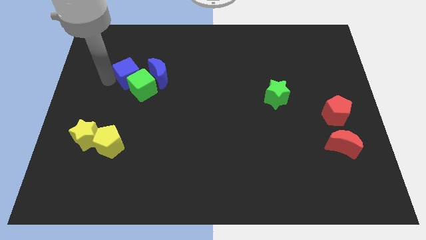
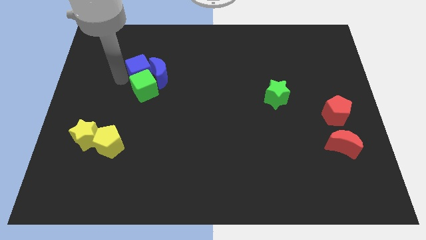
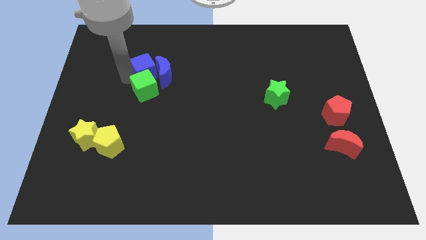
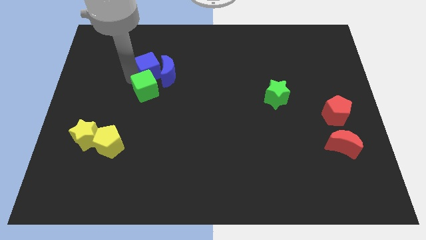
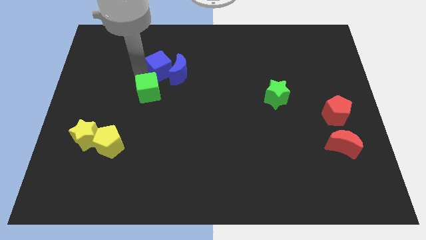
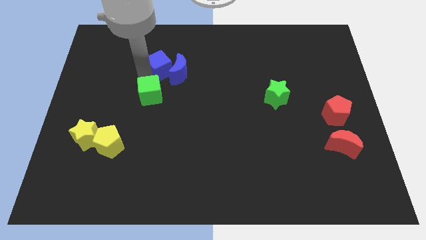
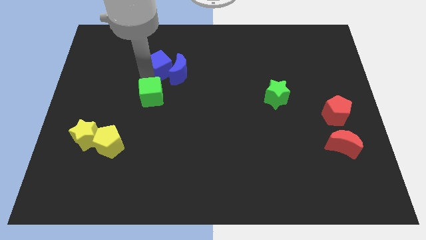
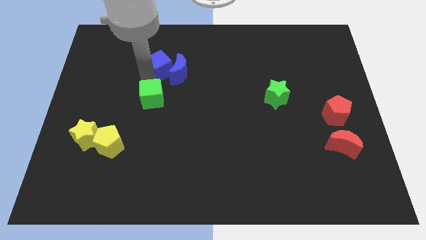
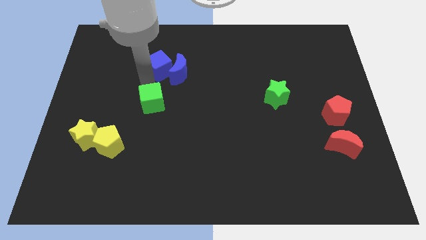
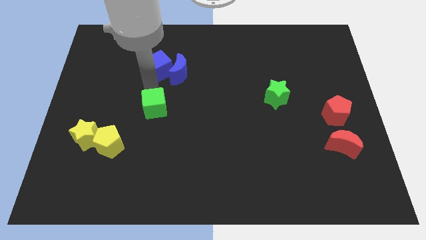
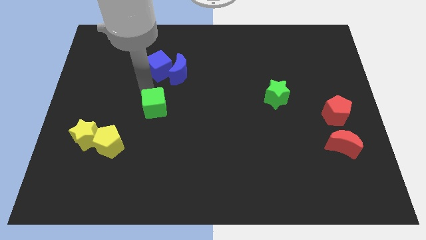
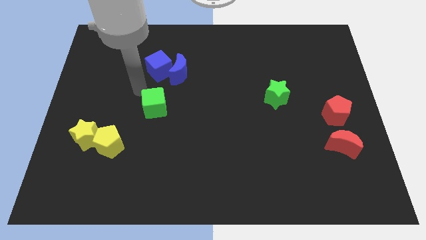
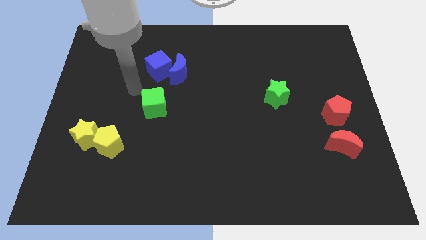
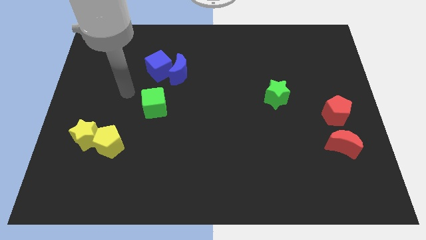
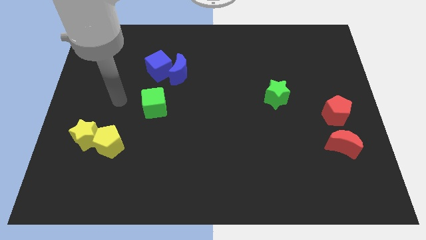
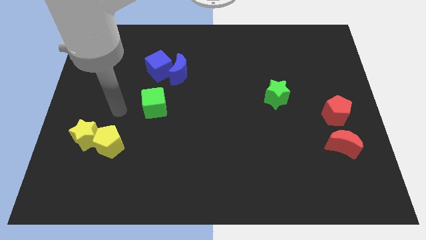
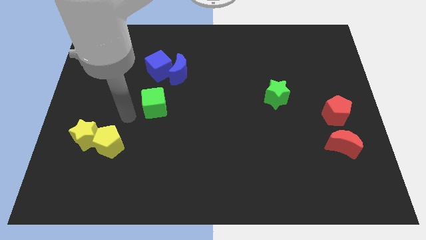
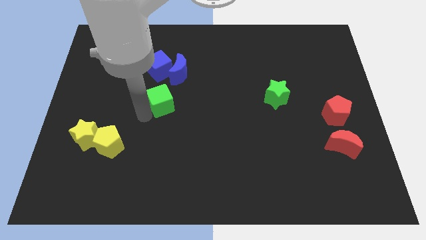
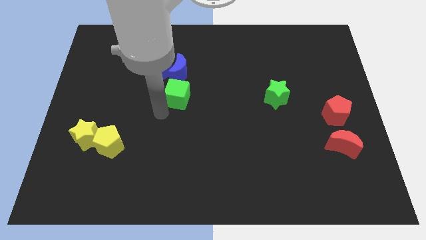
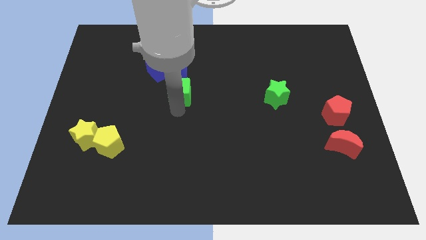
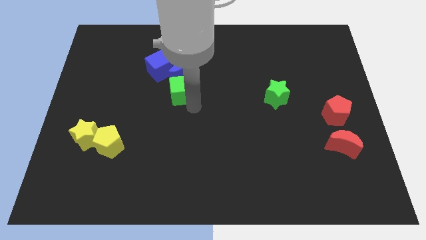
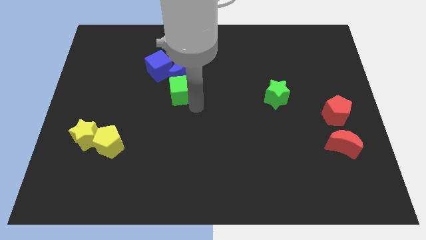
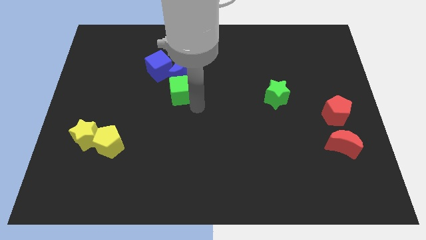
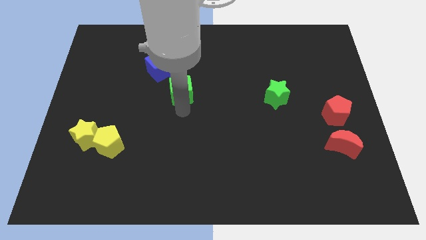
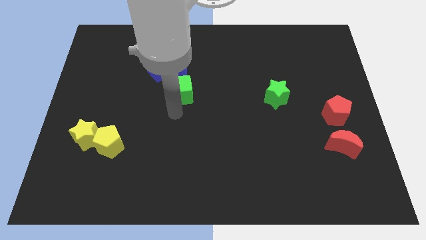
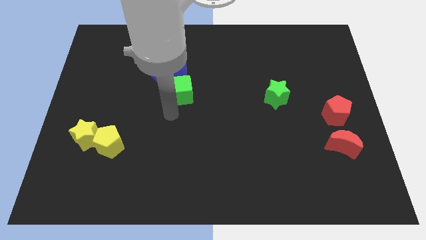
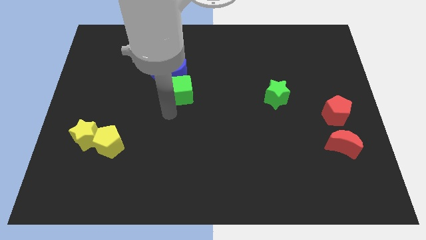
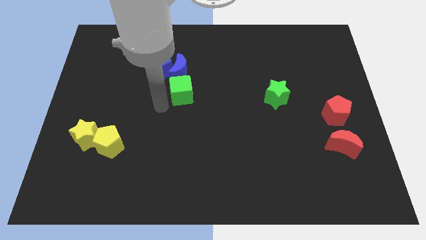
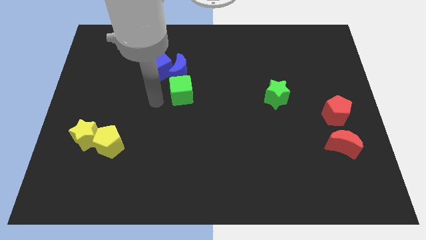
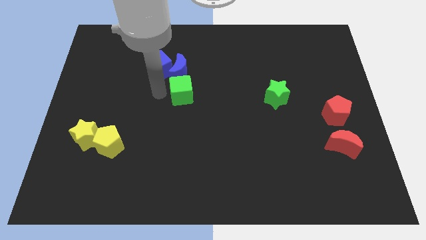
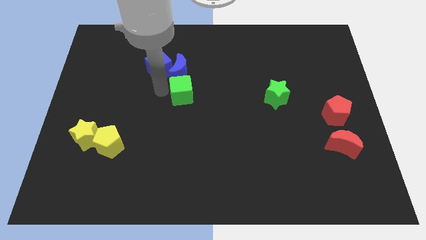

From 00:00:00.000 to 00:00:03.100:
move the green cube below the blue crescent

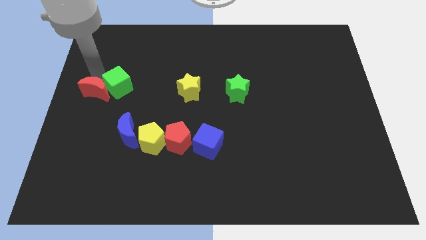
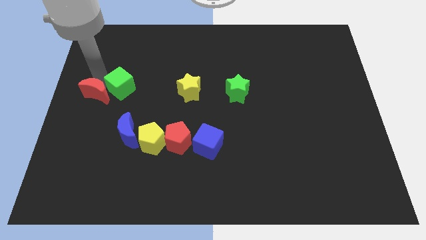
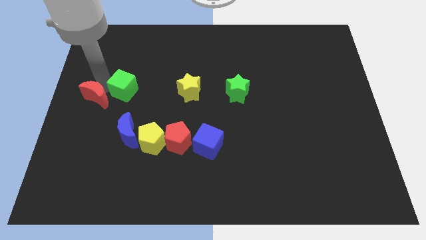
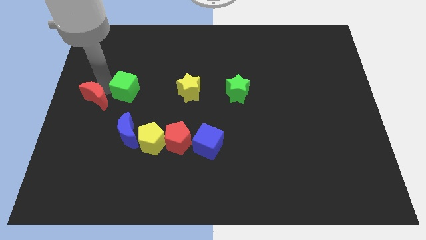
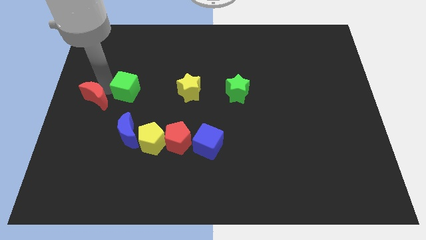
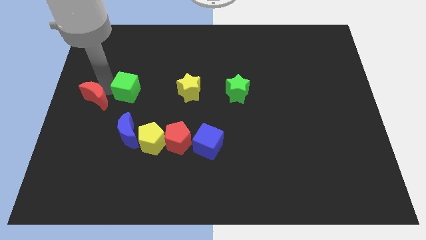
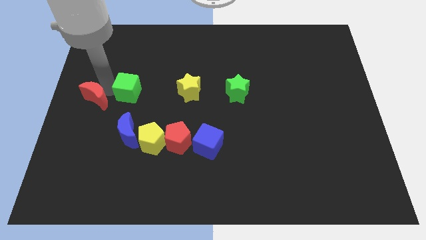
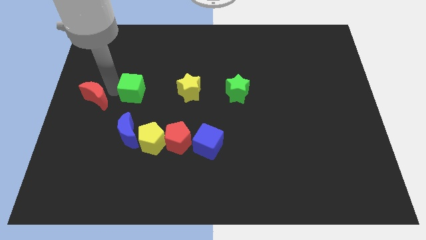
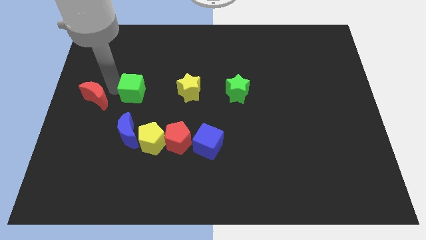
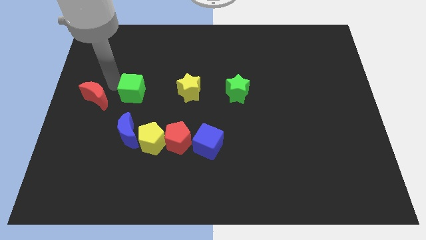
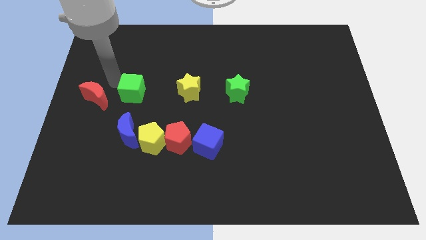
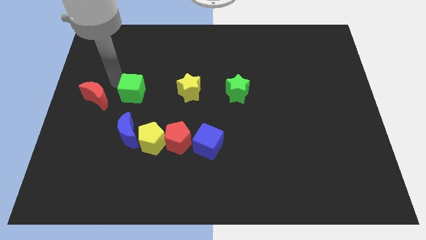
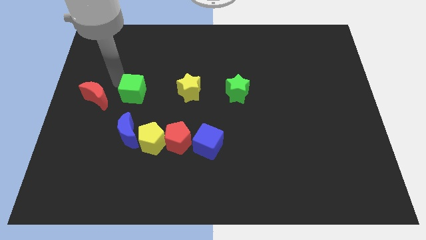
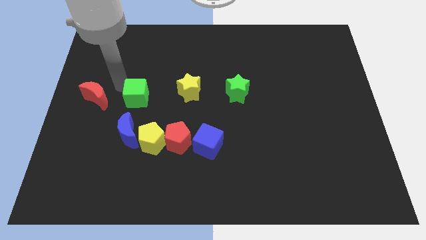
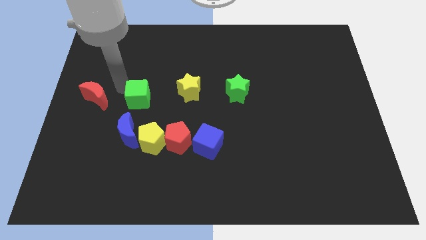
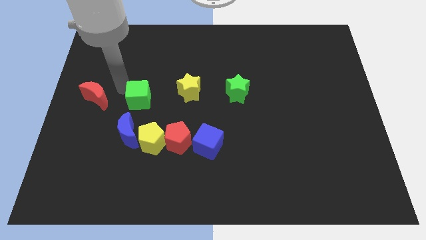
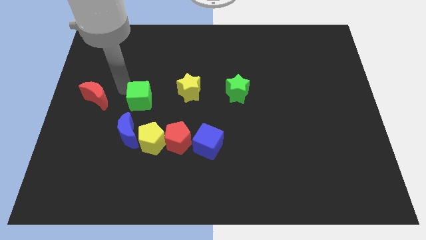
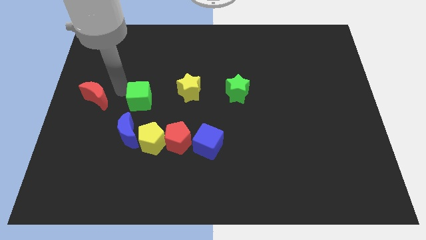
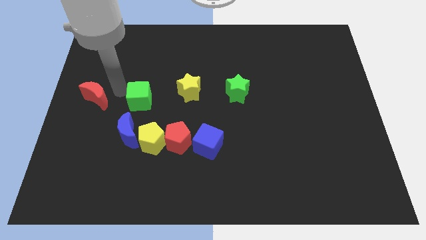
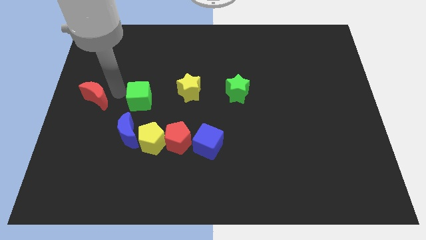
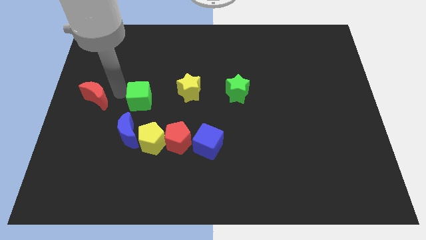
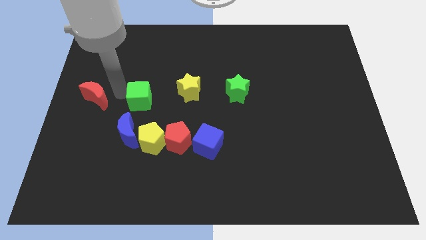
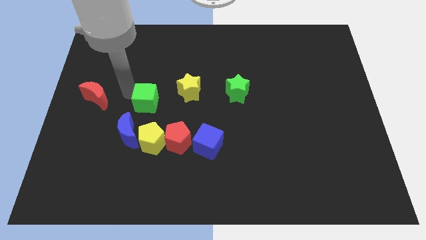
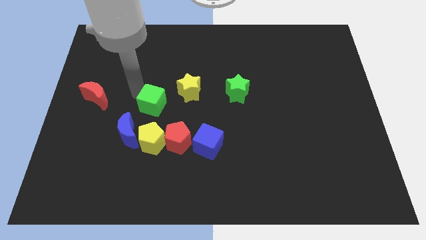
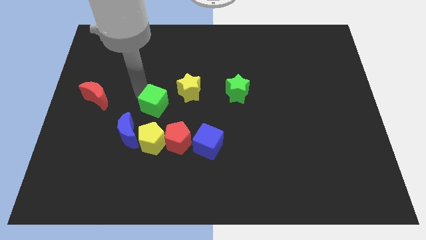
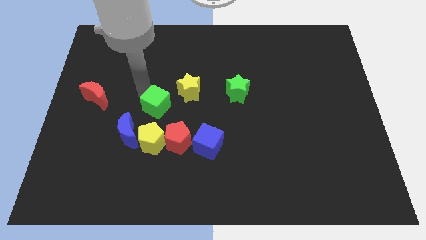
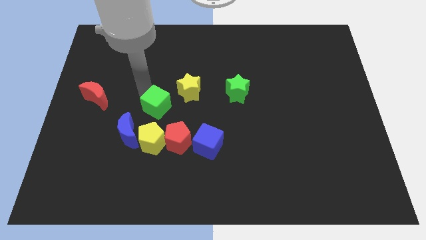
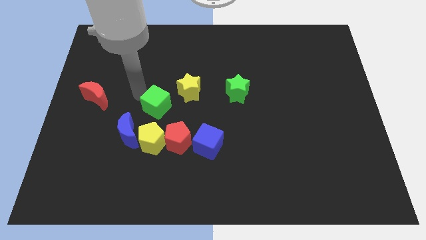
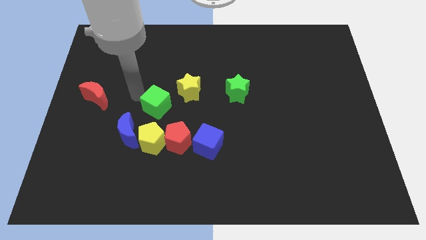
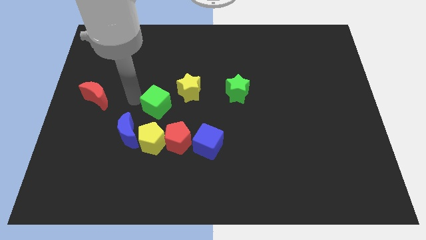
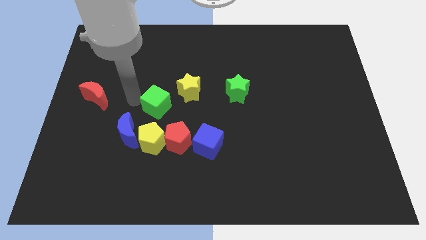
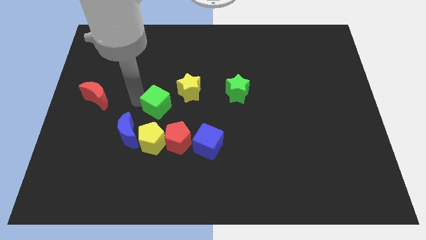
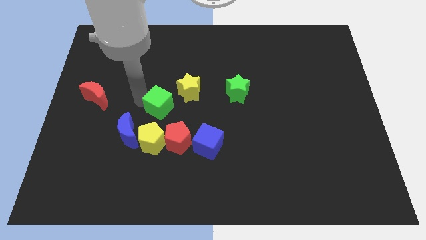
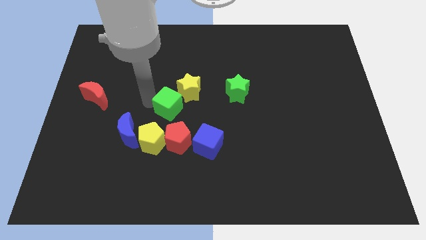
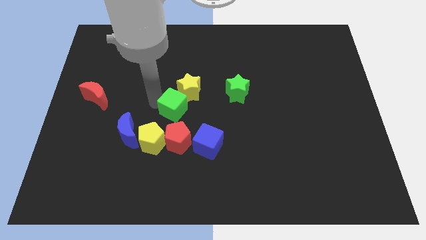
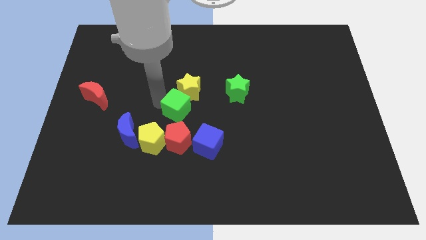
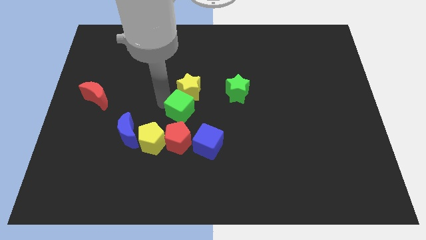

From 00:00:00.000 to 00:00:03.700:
push the green cube to the top of the red pentagon

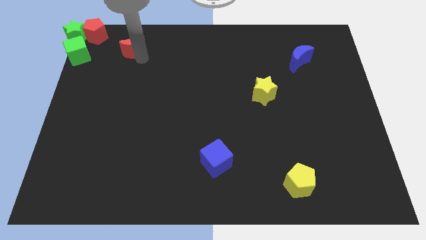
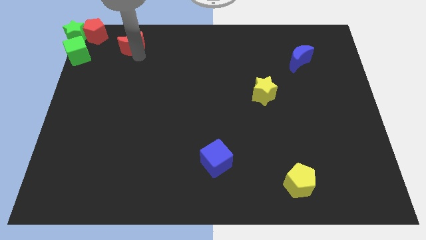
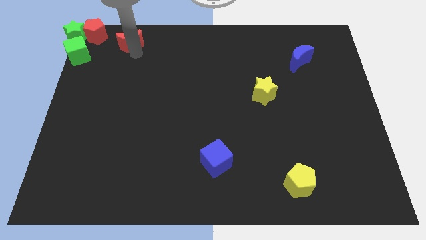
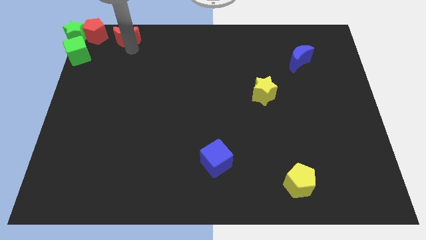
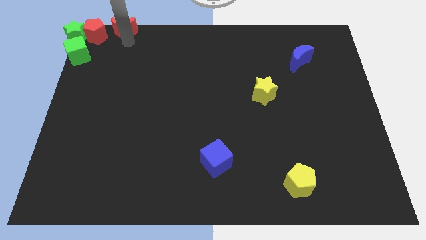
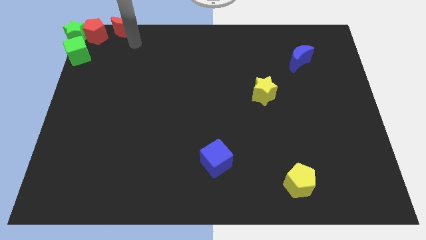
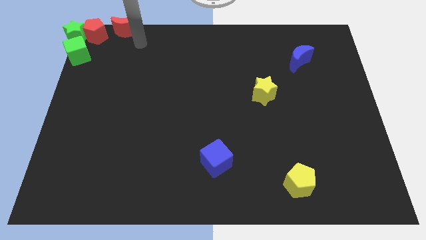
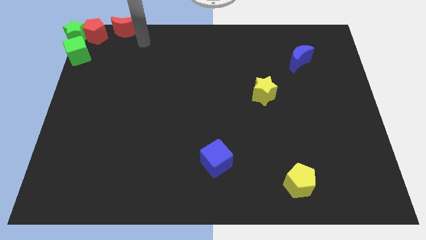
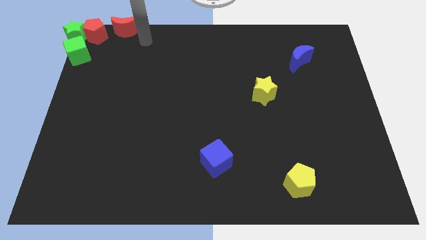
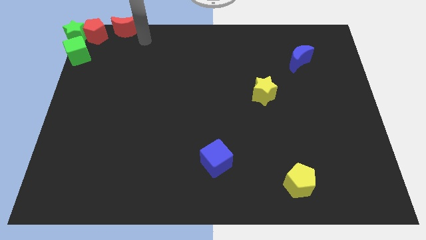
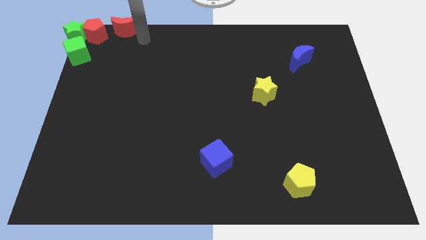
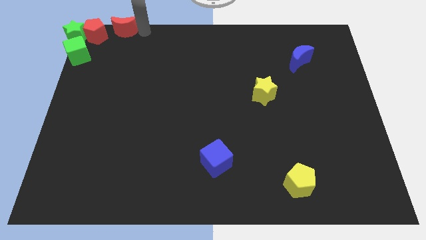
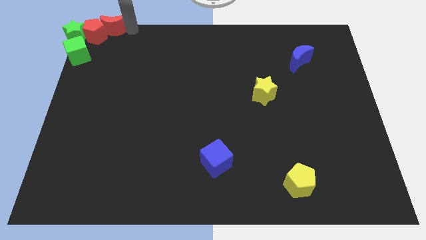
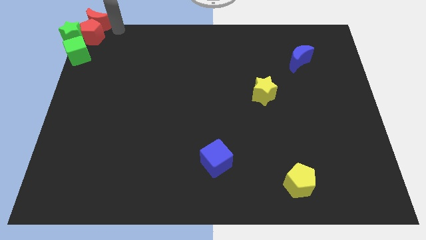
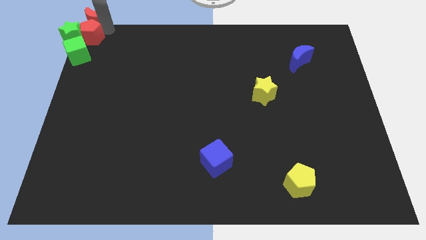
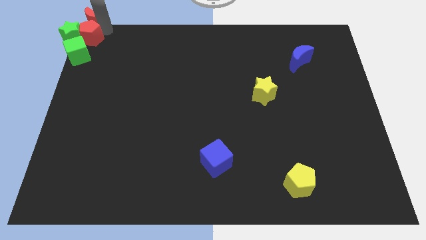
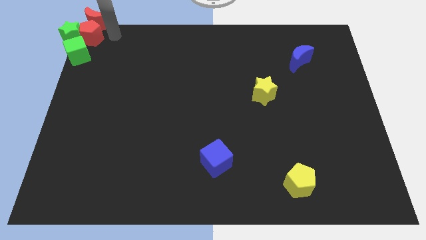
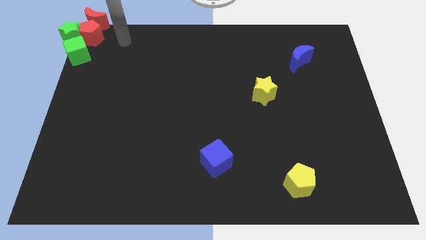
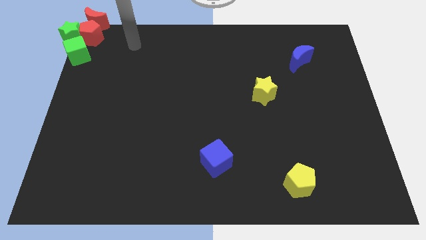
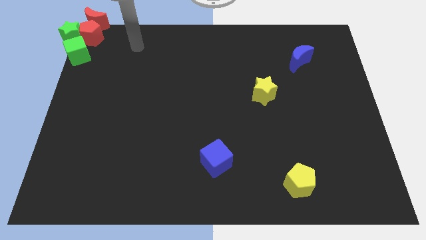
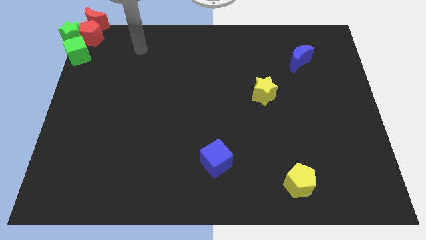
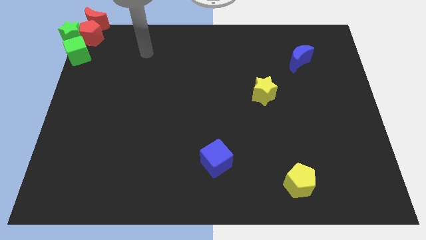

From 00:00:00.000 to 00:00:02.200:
place the red moon on top of the red pentagon
